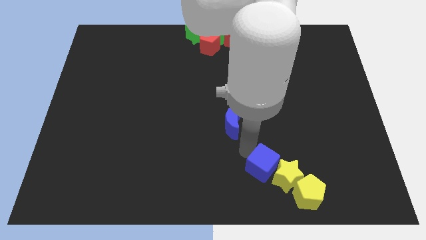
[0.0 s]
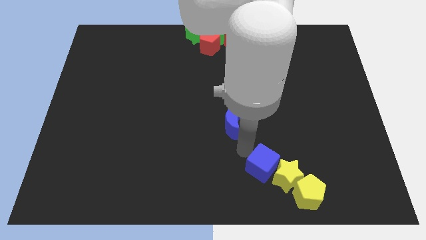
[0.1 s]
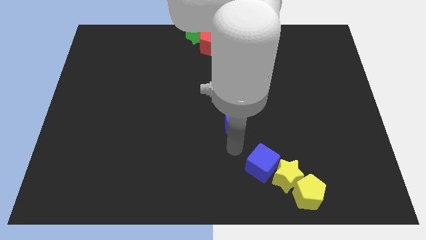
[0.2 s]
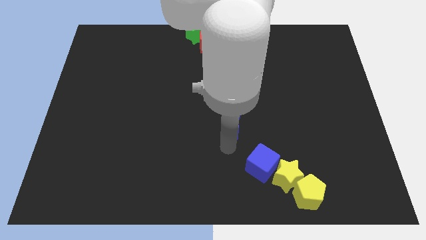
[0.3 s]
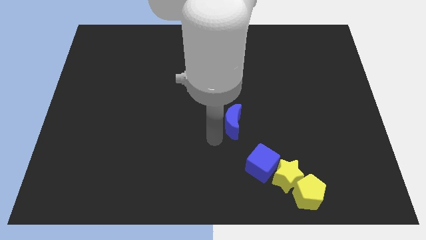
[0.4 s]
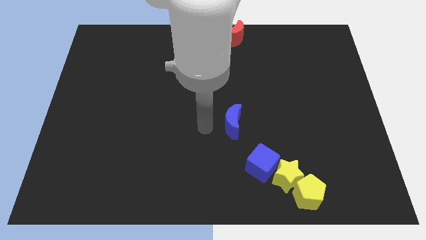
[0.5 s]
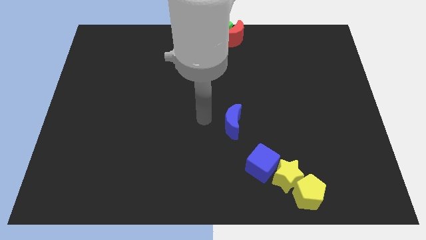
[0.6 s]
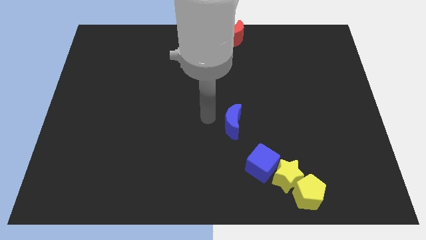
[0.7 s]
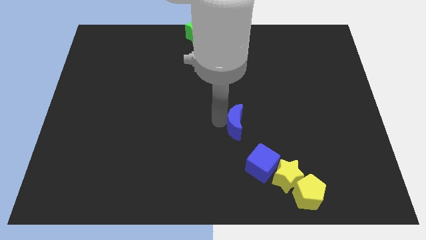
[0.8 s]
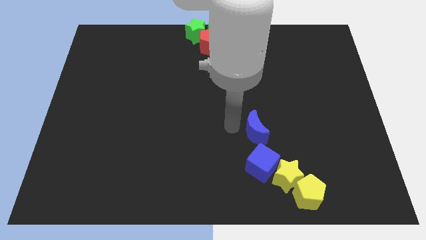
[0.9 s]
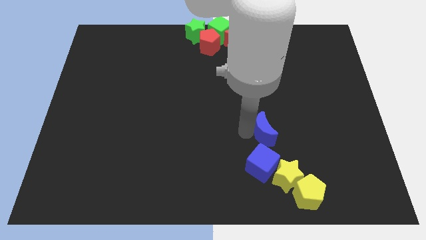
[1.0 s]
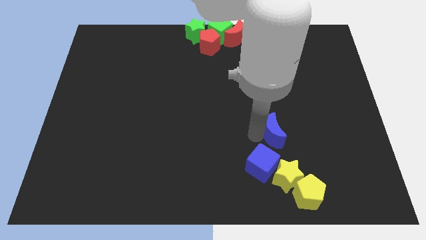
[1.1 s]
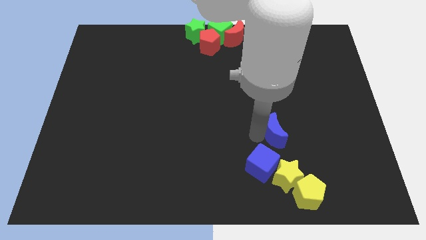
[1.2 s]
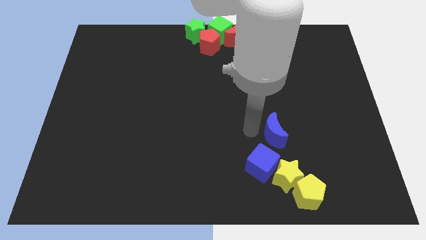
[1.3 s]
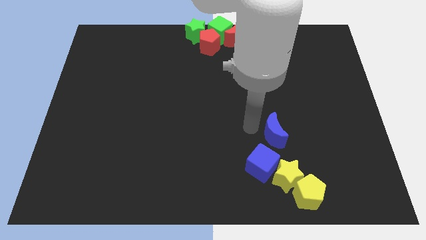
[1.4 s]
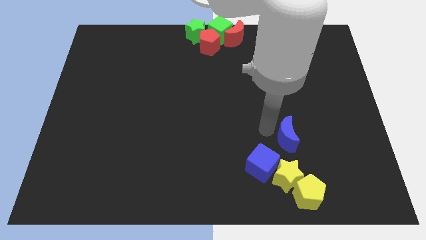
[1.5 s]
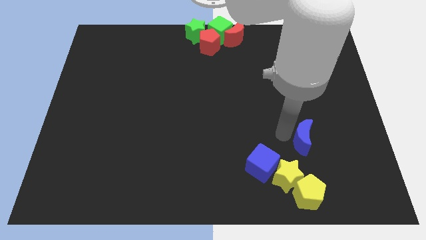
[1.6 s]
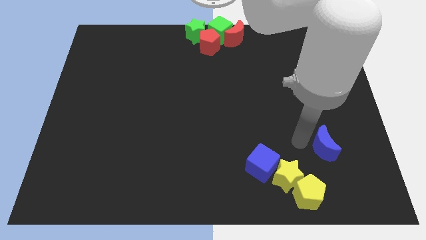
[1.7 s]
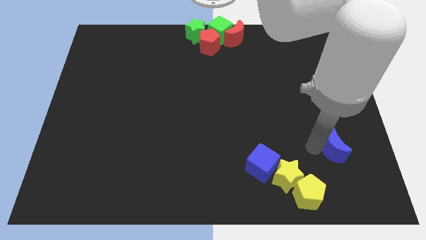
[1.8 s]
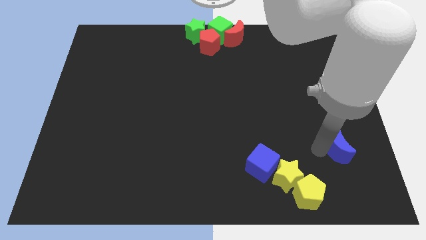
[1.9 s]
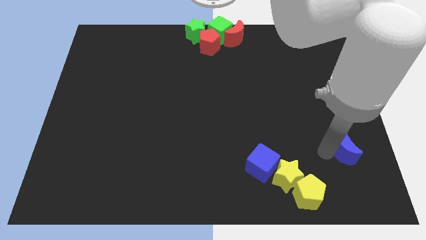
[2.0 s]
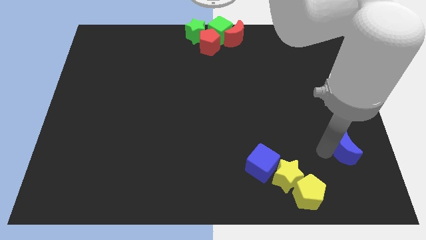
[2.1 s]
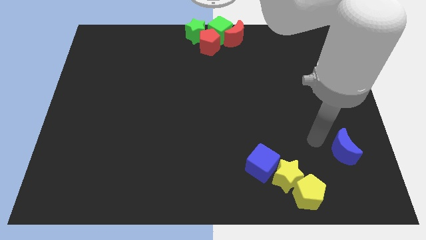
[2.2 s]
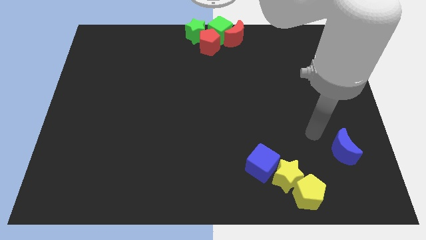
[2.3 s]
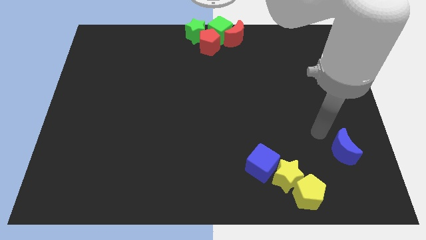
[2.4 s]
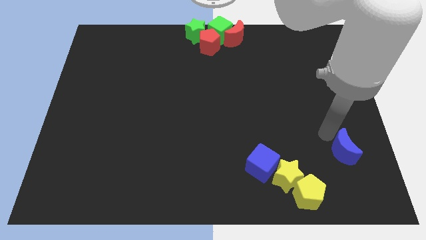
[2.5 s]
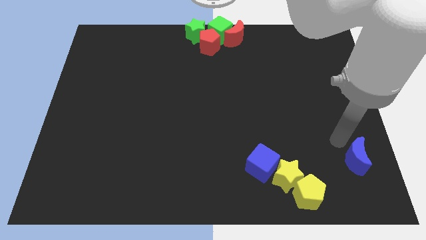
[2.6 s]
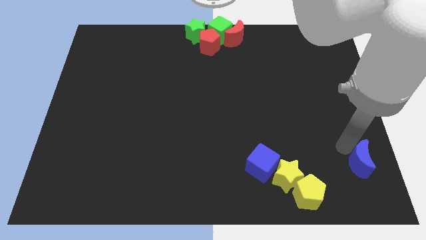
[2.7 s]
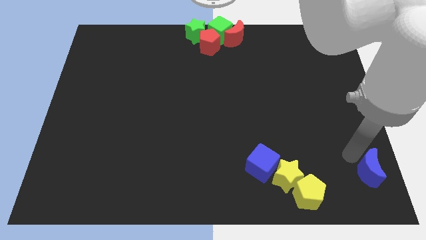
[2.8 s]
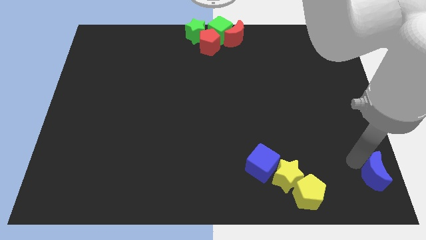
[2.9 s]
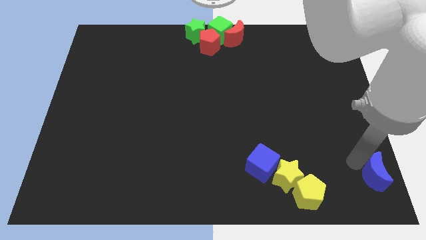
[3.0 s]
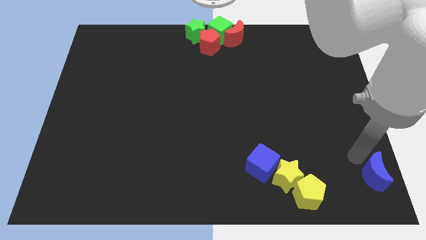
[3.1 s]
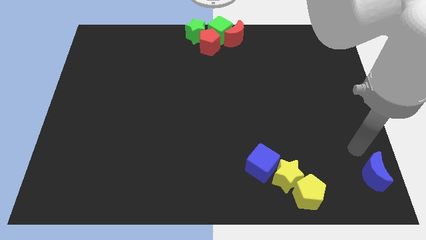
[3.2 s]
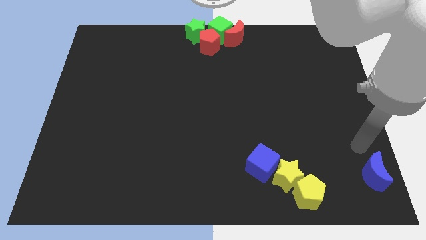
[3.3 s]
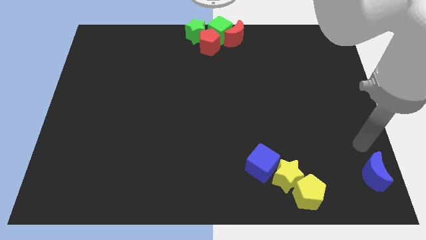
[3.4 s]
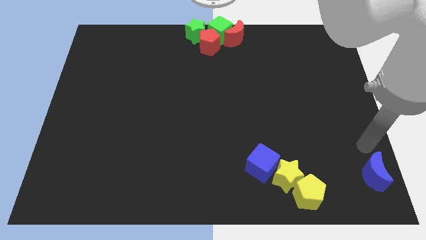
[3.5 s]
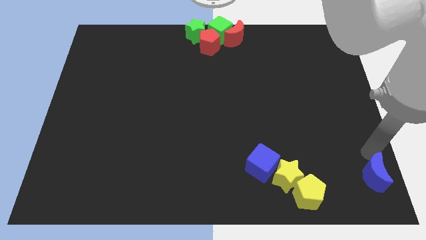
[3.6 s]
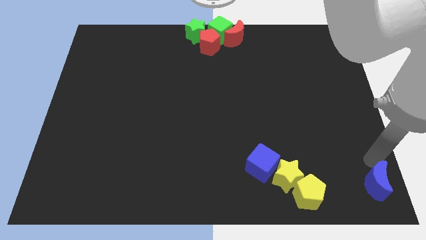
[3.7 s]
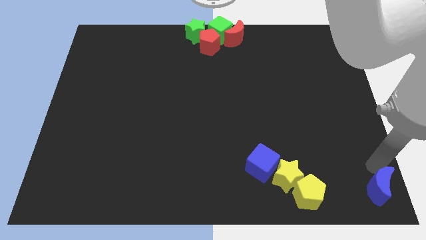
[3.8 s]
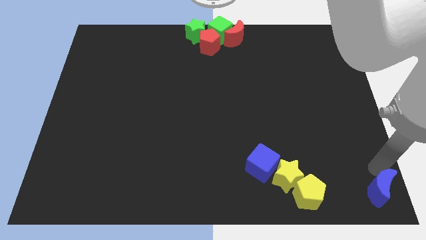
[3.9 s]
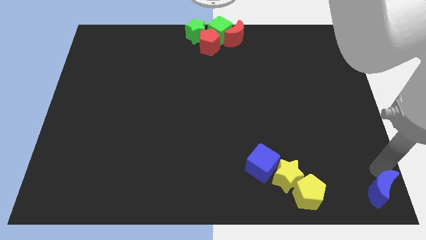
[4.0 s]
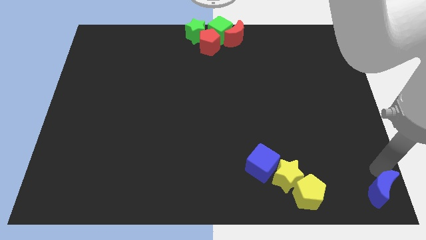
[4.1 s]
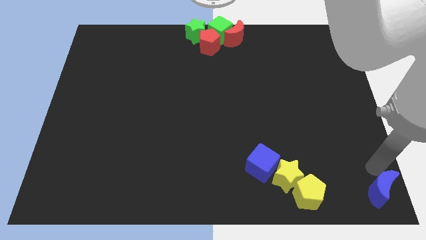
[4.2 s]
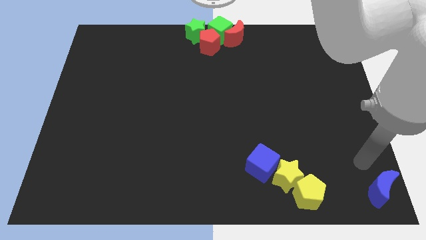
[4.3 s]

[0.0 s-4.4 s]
move the blue moon to the bottom right of the board

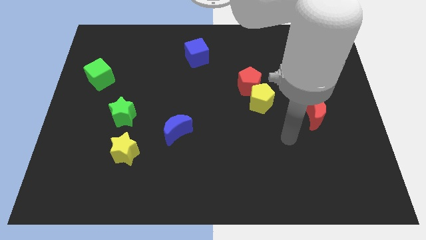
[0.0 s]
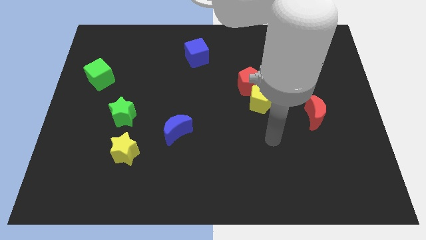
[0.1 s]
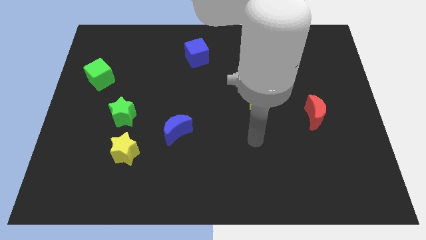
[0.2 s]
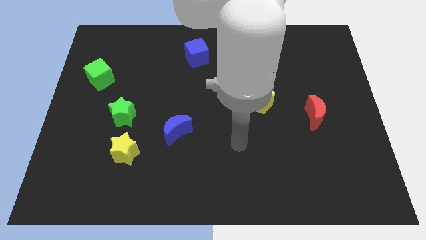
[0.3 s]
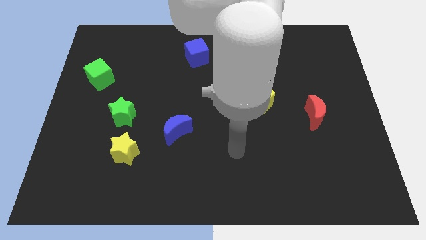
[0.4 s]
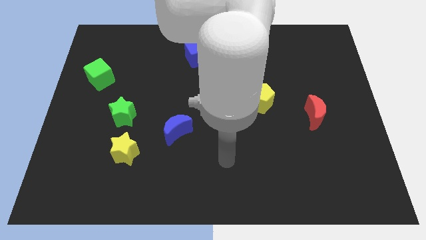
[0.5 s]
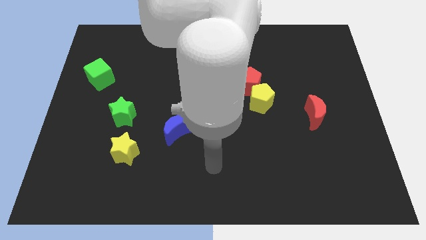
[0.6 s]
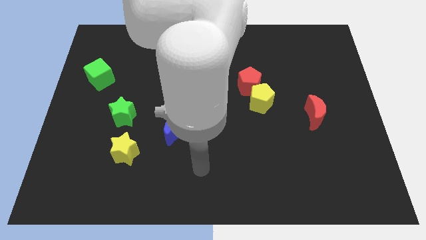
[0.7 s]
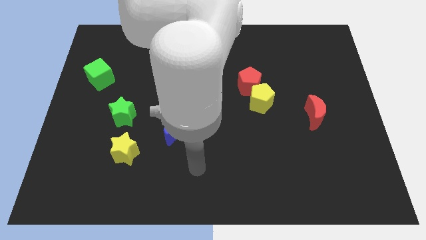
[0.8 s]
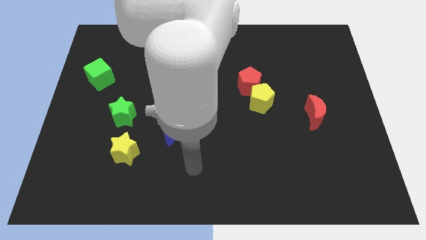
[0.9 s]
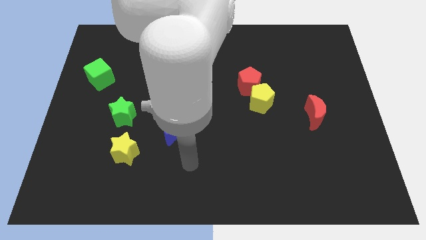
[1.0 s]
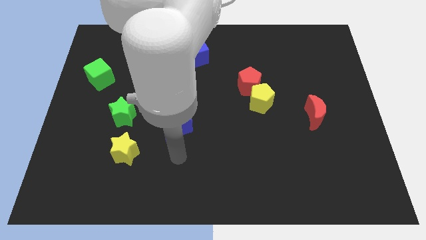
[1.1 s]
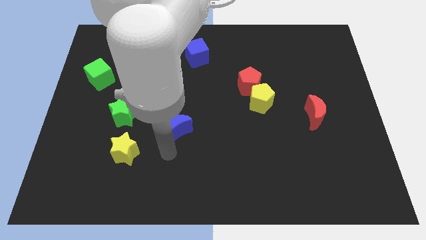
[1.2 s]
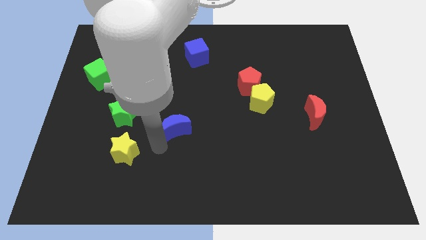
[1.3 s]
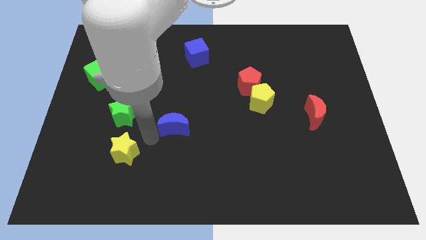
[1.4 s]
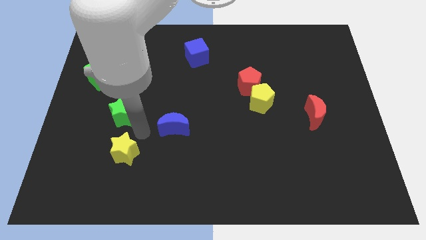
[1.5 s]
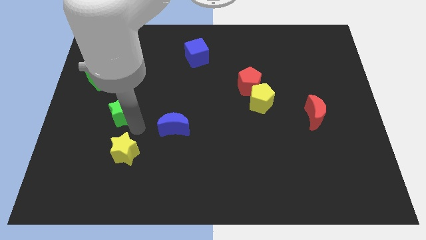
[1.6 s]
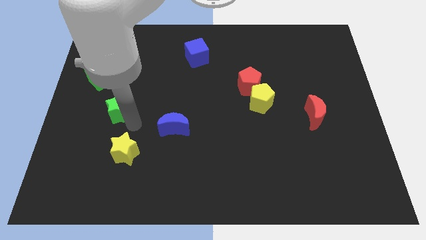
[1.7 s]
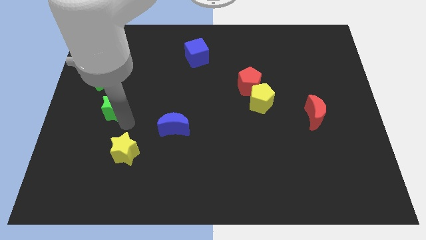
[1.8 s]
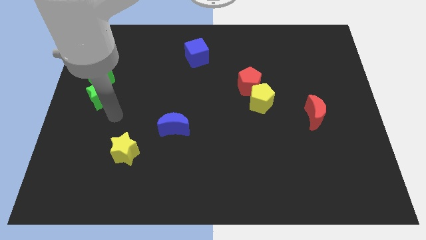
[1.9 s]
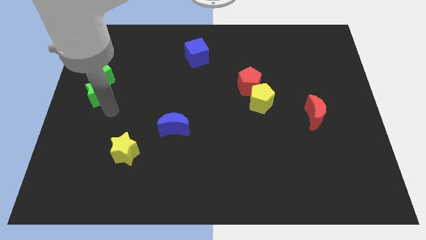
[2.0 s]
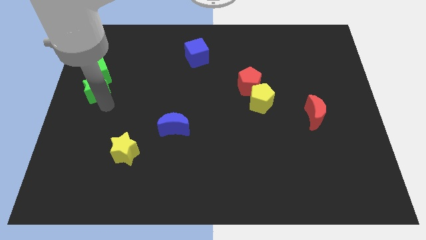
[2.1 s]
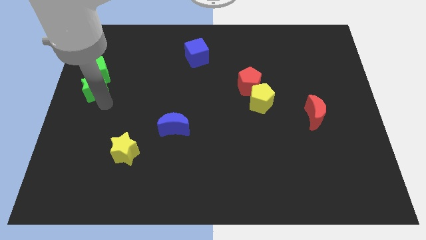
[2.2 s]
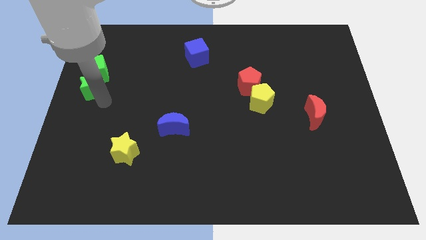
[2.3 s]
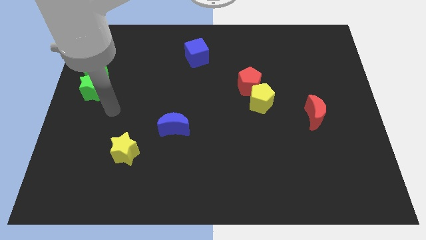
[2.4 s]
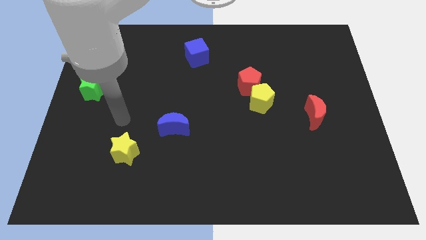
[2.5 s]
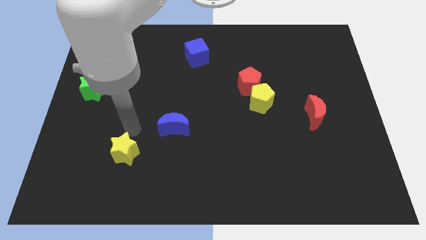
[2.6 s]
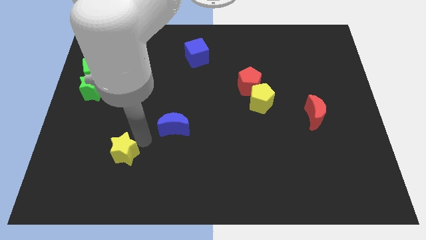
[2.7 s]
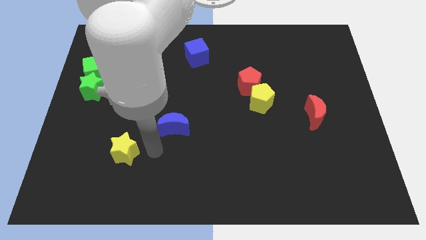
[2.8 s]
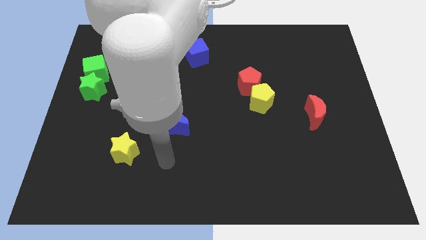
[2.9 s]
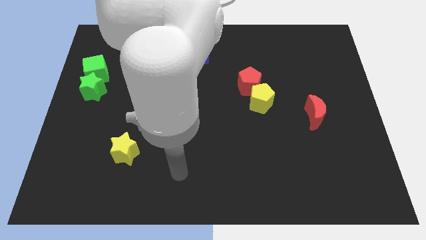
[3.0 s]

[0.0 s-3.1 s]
push the green star to the bottom of the green cube

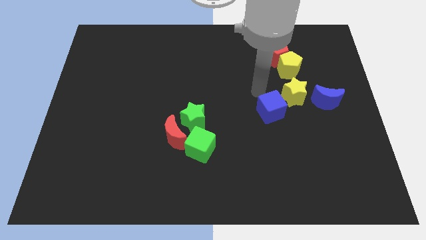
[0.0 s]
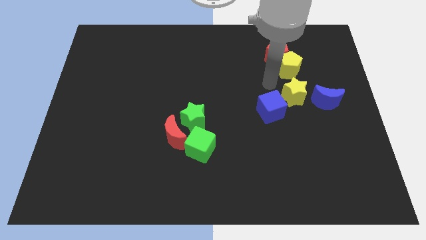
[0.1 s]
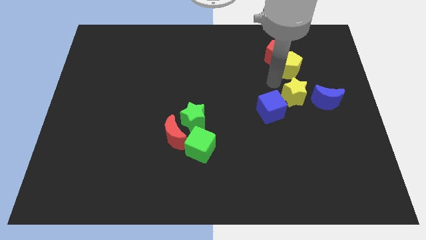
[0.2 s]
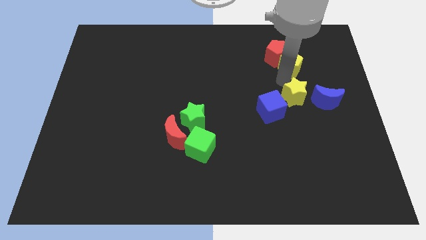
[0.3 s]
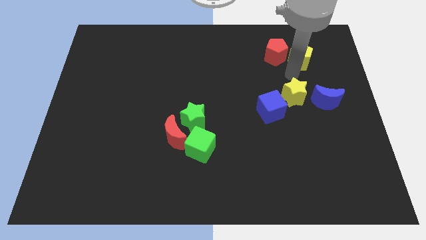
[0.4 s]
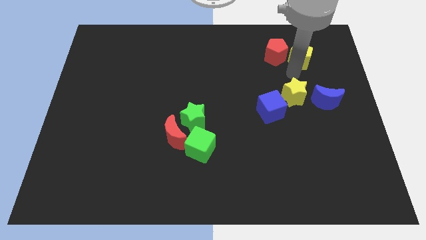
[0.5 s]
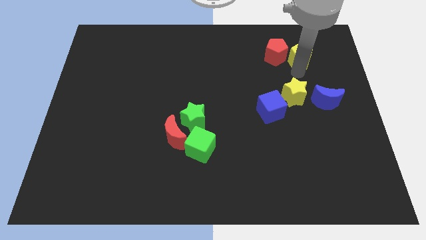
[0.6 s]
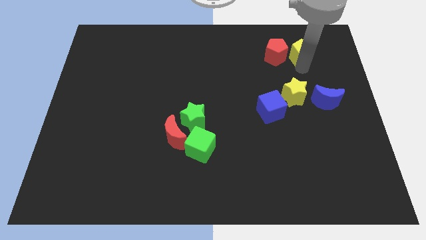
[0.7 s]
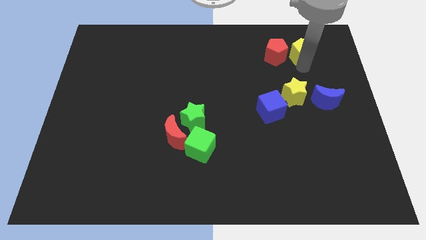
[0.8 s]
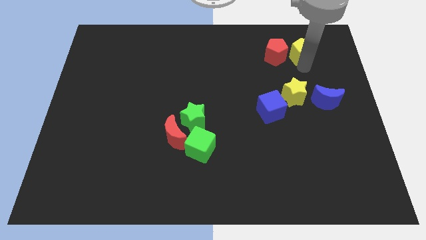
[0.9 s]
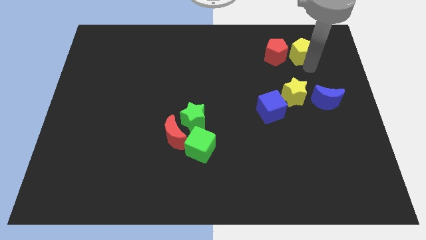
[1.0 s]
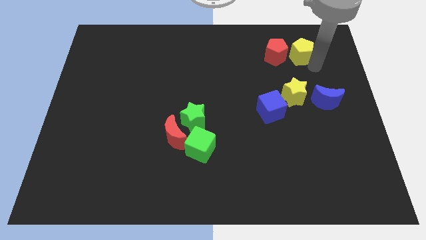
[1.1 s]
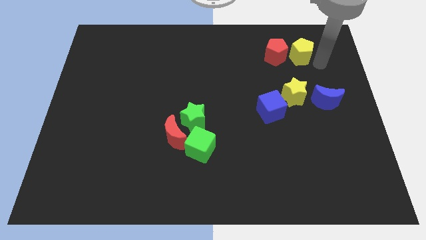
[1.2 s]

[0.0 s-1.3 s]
separate the yellow pentagon from yellow star

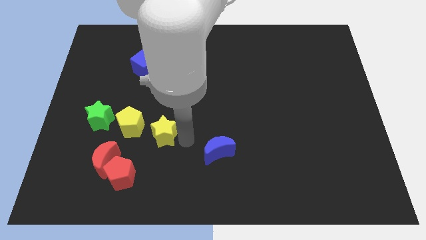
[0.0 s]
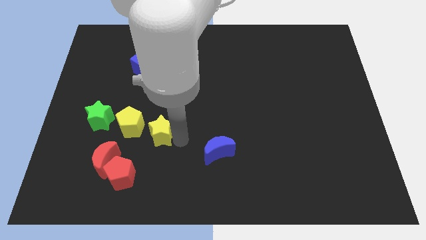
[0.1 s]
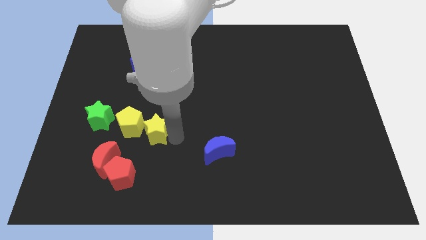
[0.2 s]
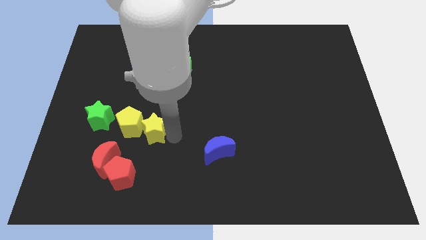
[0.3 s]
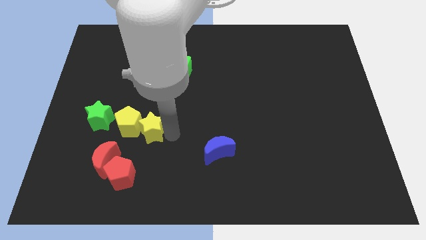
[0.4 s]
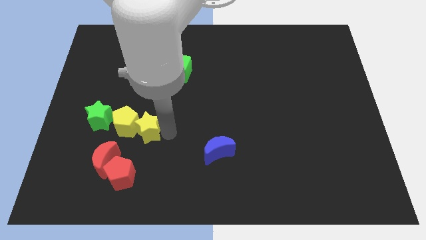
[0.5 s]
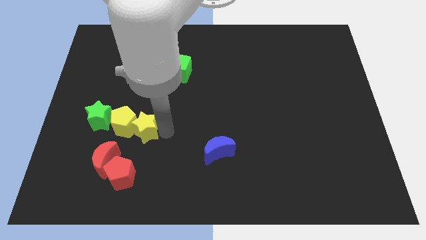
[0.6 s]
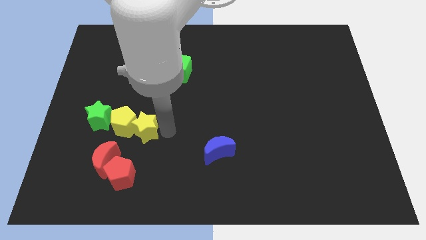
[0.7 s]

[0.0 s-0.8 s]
push the yellow star into the yellow pentagon
